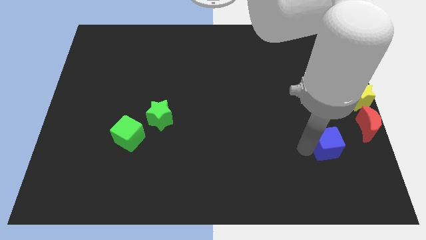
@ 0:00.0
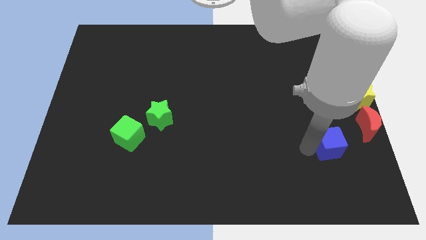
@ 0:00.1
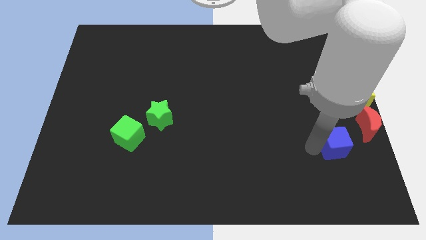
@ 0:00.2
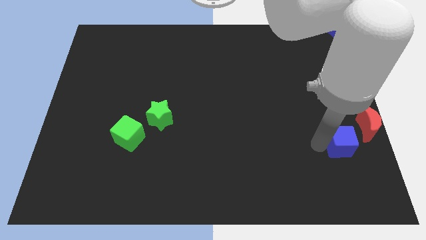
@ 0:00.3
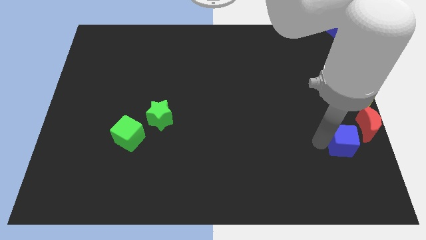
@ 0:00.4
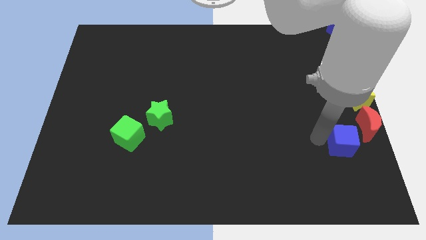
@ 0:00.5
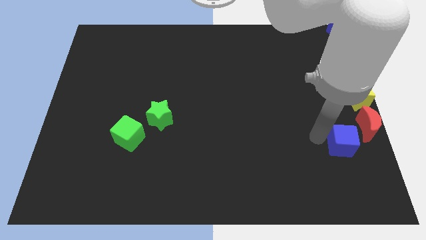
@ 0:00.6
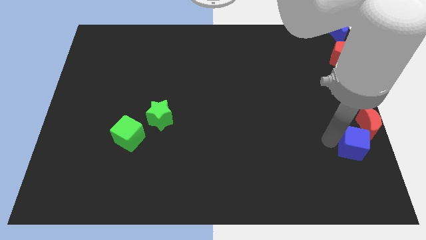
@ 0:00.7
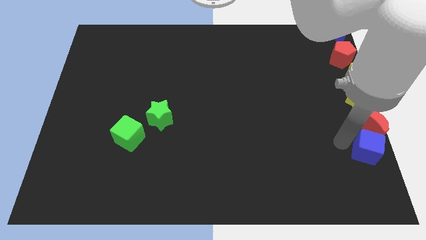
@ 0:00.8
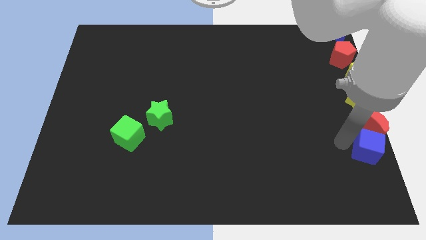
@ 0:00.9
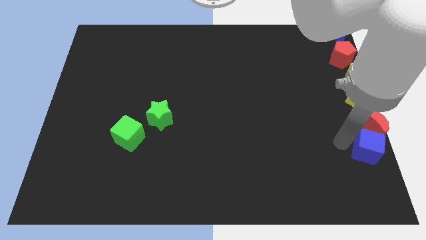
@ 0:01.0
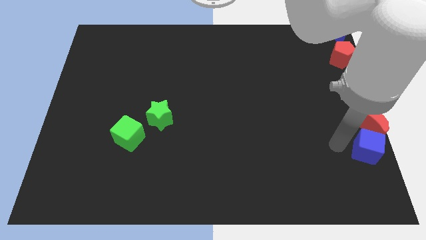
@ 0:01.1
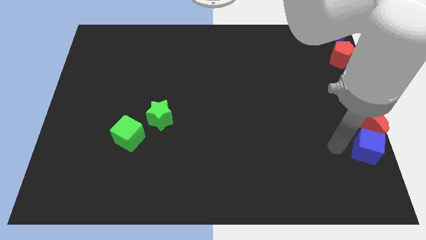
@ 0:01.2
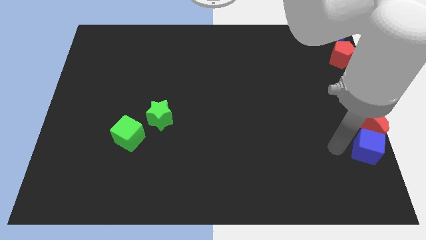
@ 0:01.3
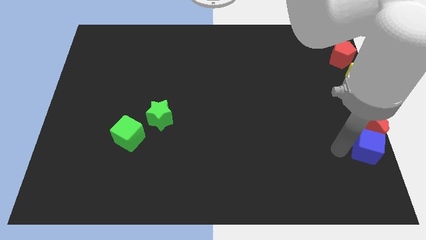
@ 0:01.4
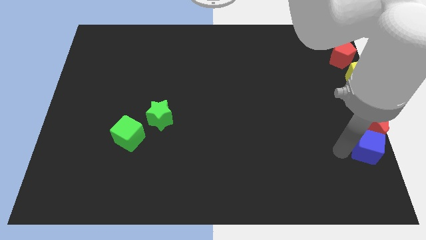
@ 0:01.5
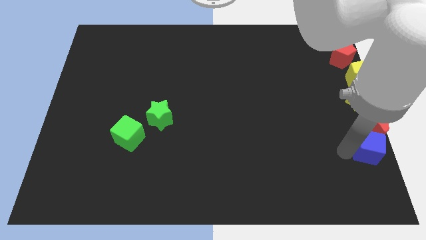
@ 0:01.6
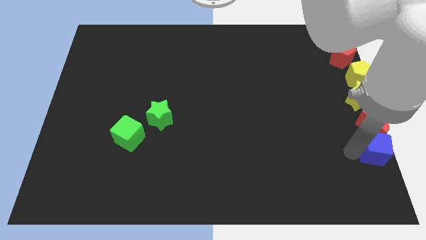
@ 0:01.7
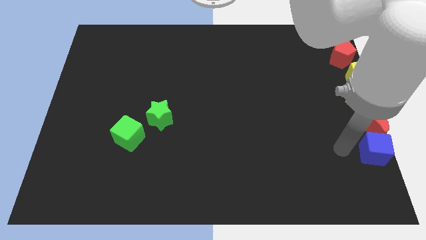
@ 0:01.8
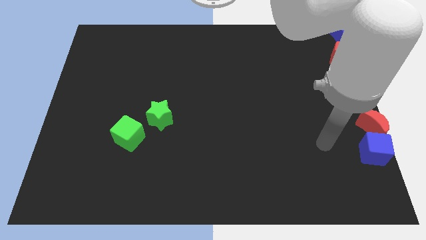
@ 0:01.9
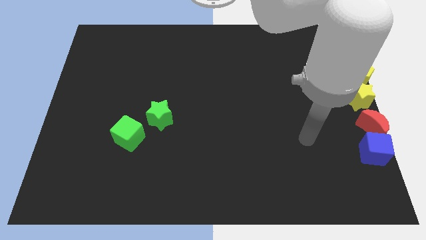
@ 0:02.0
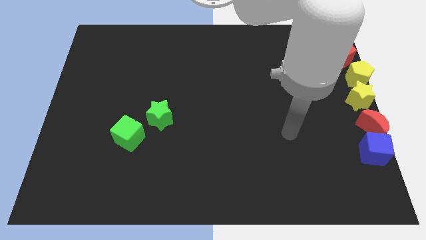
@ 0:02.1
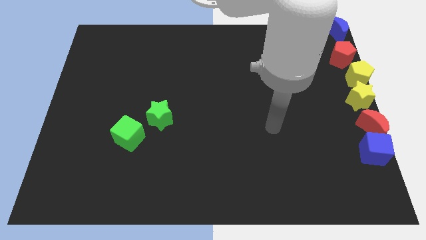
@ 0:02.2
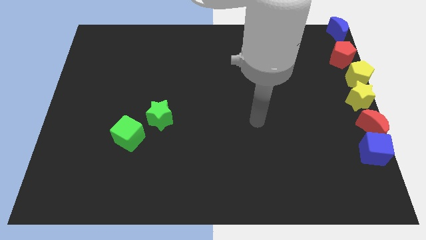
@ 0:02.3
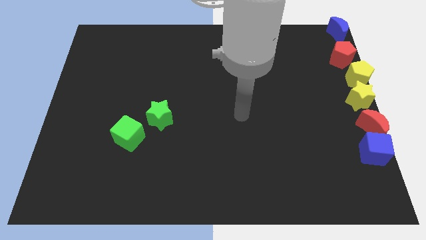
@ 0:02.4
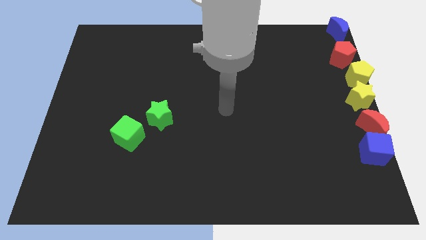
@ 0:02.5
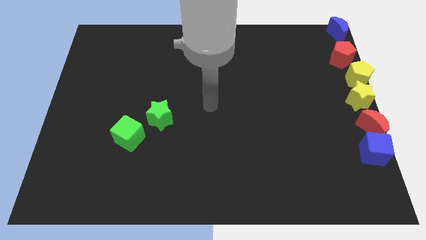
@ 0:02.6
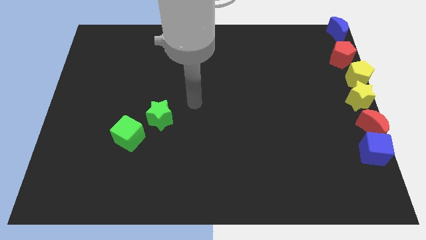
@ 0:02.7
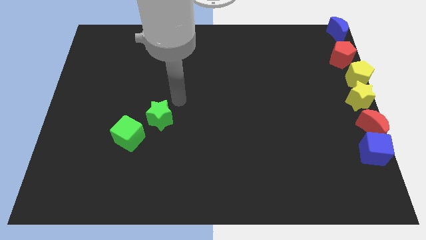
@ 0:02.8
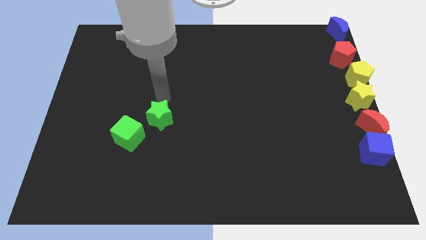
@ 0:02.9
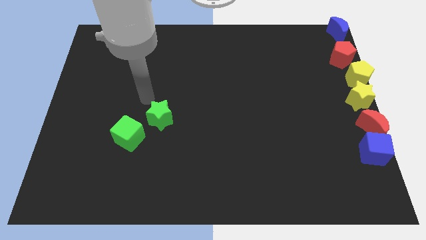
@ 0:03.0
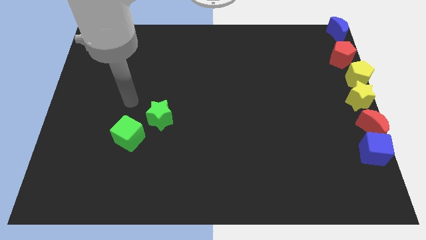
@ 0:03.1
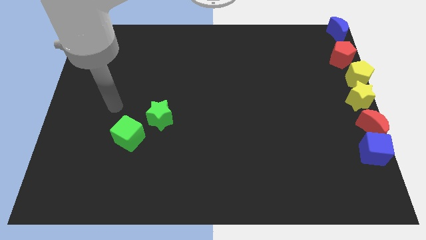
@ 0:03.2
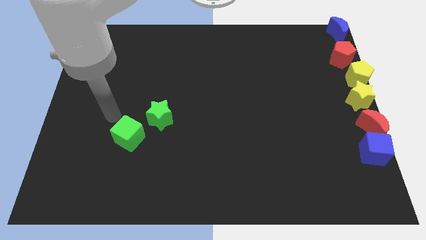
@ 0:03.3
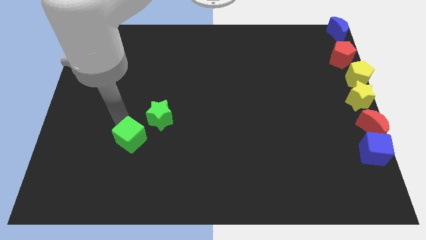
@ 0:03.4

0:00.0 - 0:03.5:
put the blue cube vertically below the red moon

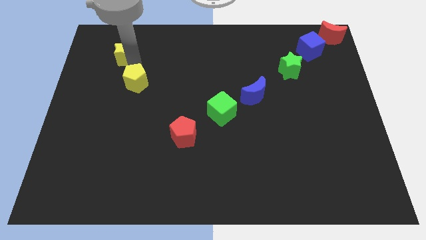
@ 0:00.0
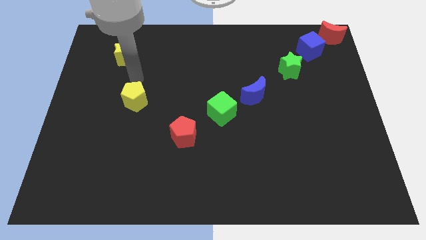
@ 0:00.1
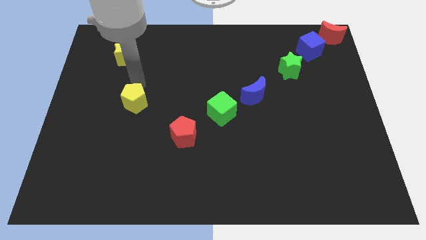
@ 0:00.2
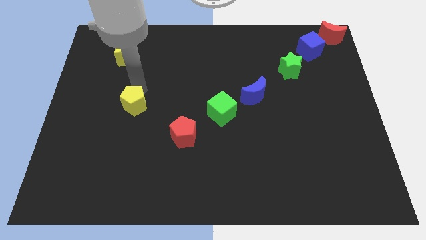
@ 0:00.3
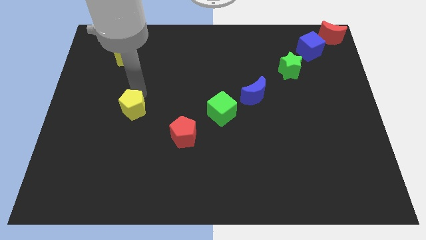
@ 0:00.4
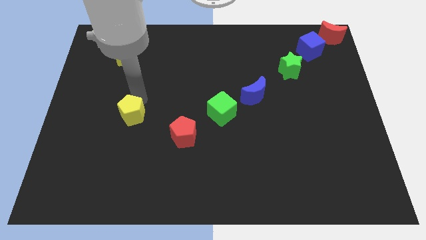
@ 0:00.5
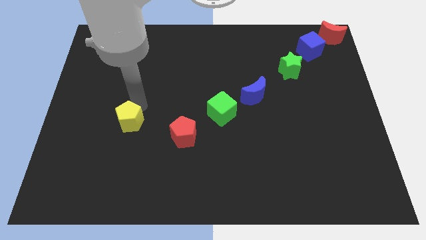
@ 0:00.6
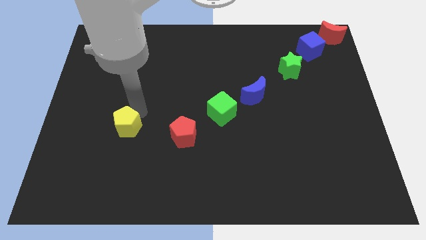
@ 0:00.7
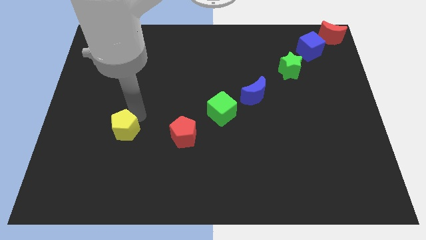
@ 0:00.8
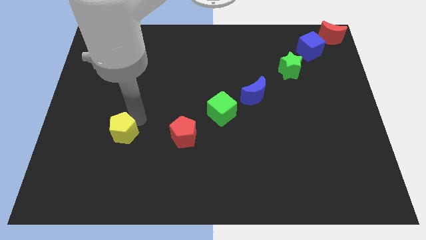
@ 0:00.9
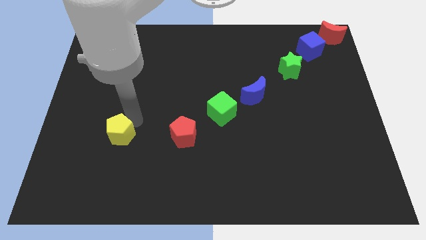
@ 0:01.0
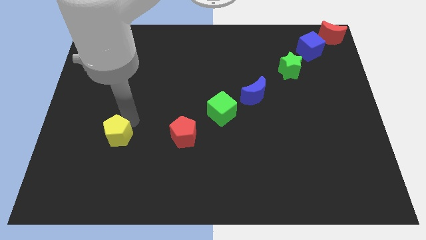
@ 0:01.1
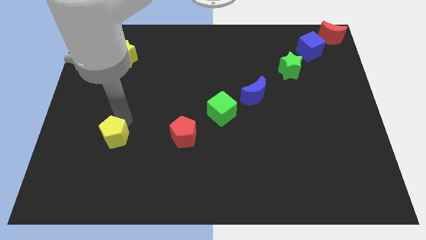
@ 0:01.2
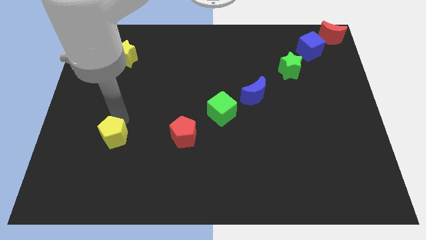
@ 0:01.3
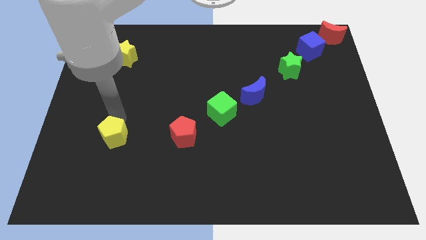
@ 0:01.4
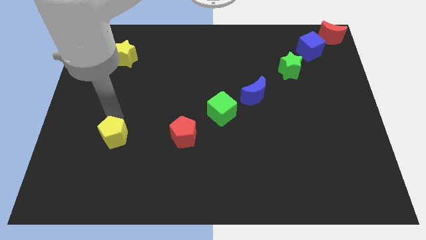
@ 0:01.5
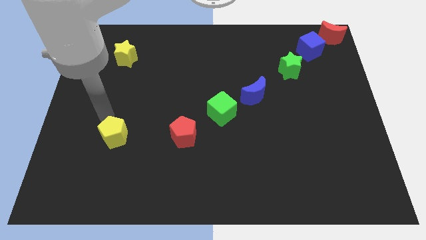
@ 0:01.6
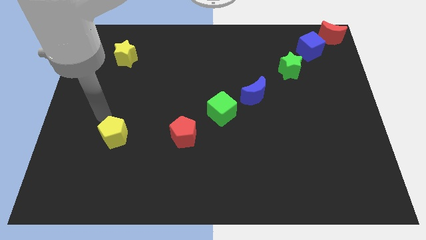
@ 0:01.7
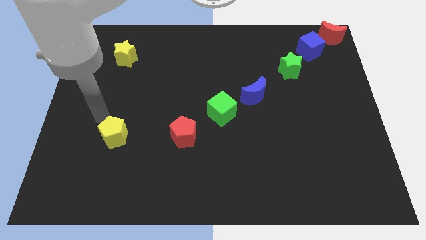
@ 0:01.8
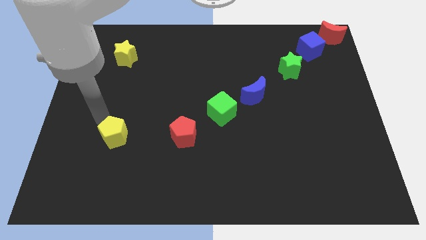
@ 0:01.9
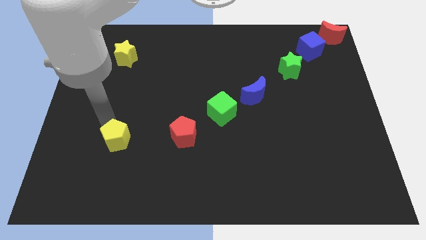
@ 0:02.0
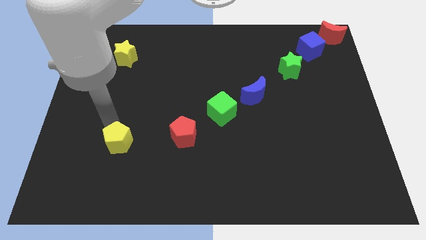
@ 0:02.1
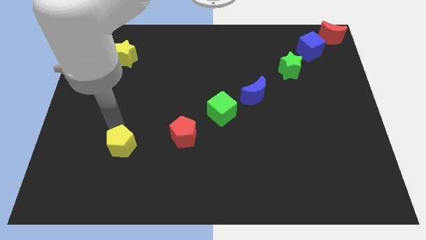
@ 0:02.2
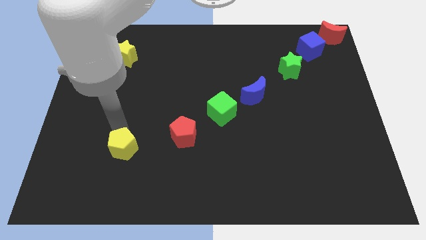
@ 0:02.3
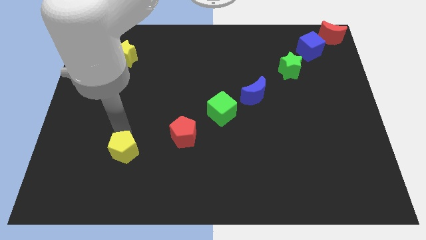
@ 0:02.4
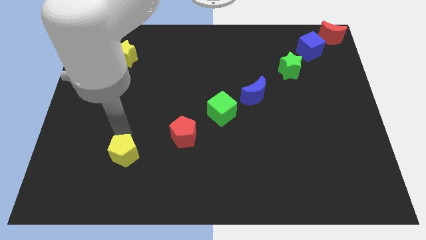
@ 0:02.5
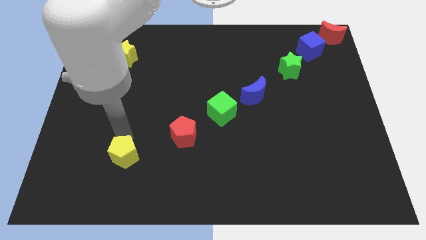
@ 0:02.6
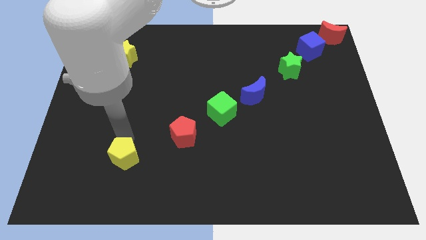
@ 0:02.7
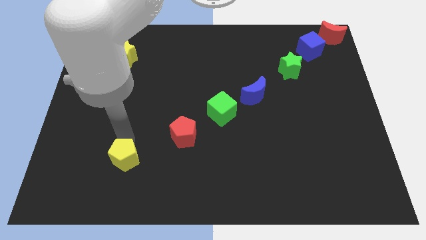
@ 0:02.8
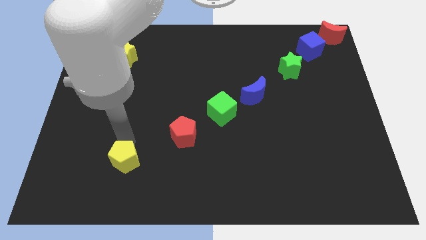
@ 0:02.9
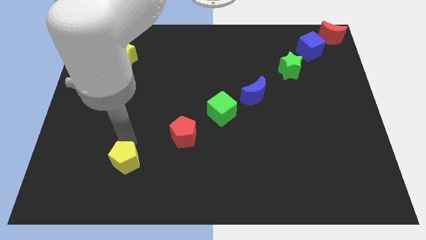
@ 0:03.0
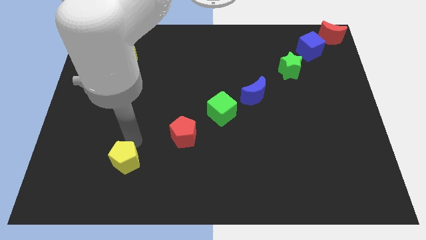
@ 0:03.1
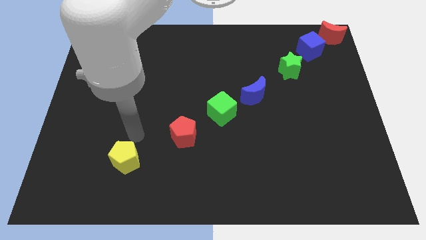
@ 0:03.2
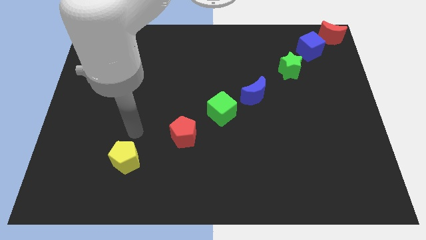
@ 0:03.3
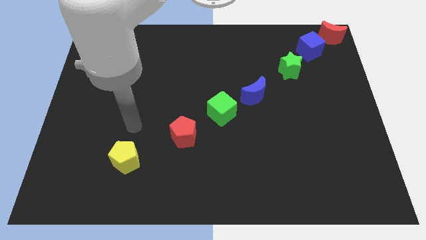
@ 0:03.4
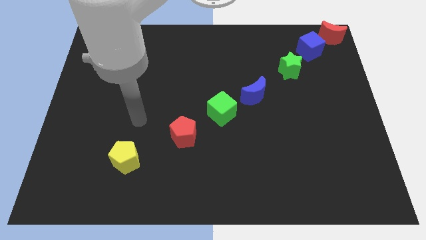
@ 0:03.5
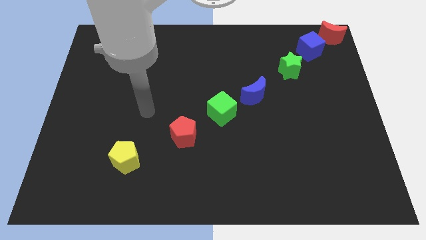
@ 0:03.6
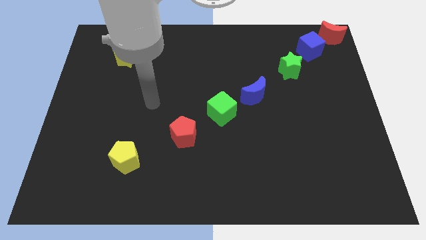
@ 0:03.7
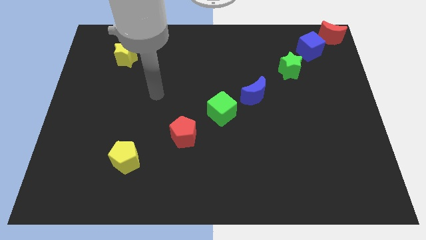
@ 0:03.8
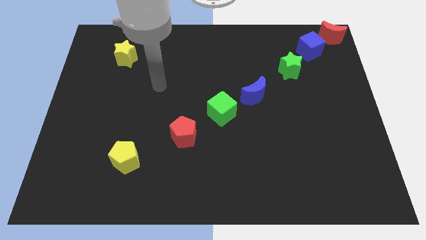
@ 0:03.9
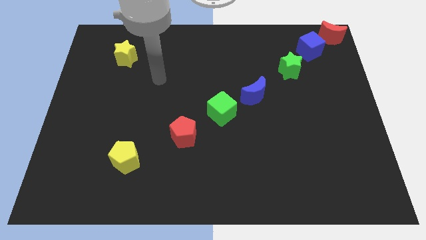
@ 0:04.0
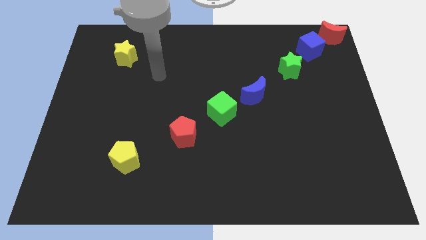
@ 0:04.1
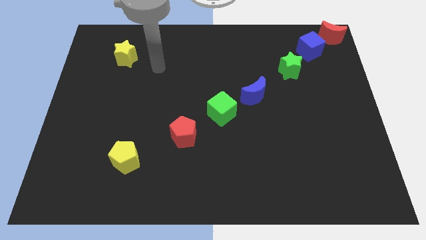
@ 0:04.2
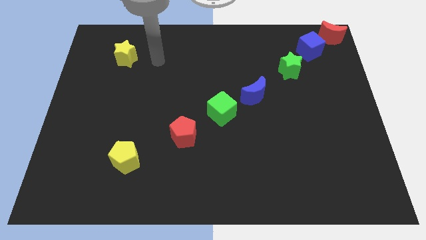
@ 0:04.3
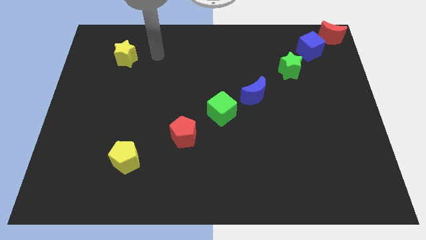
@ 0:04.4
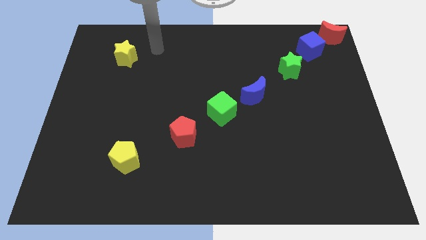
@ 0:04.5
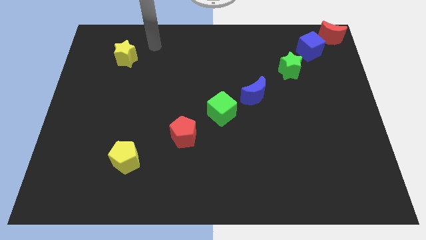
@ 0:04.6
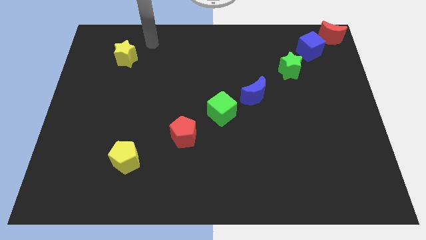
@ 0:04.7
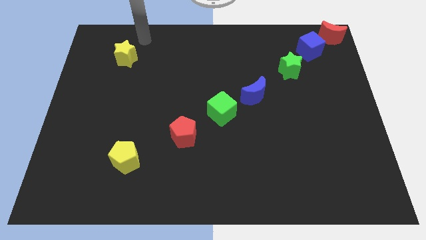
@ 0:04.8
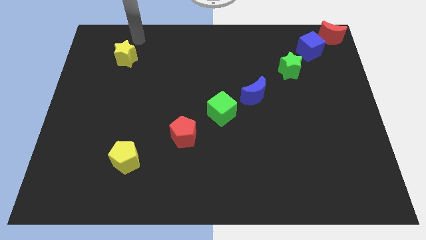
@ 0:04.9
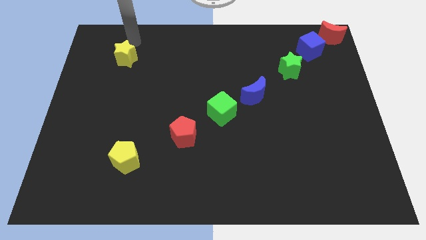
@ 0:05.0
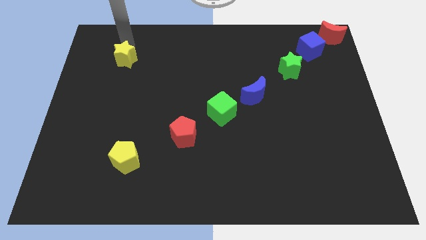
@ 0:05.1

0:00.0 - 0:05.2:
move the yellow pentagon diagonal to the left bottom of the red pentagon

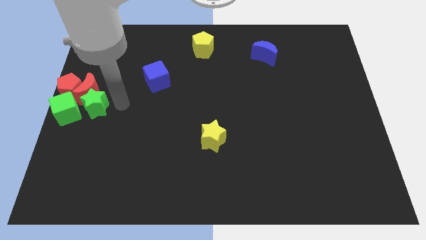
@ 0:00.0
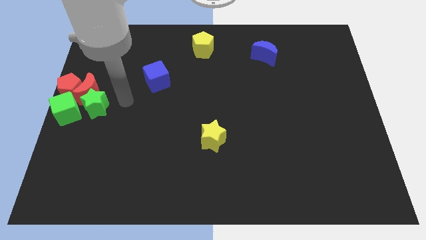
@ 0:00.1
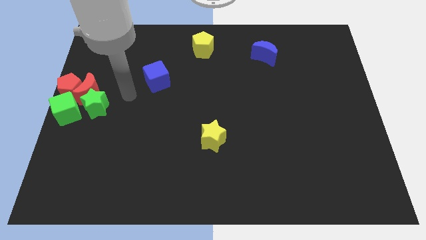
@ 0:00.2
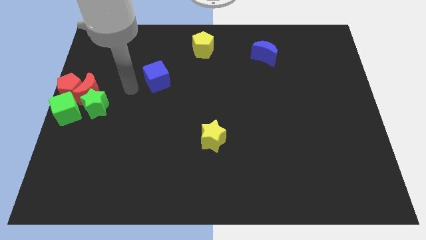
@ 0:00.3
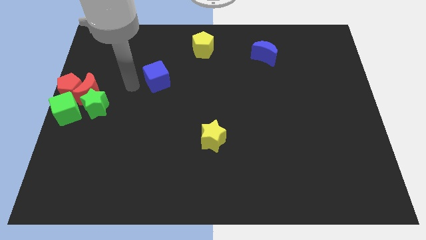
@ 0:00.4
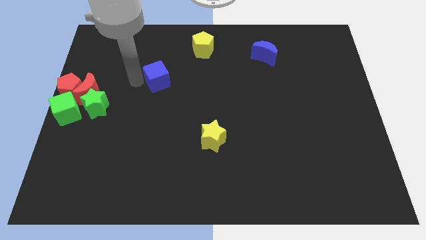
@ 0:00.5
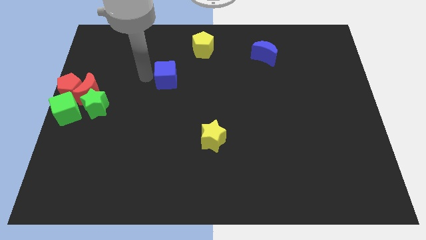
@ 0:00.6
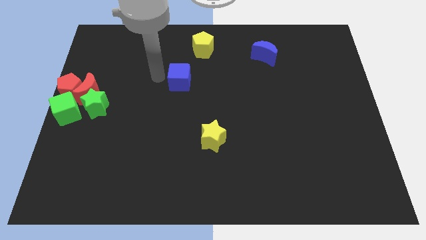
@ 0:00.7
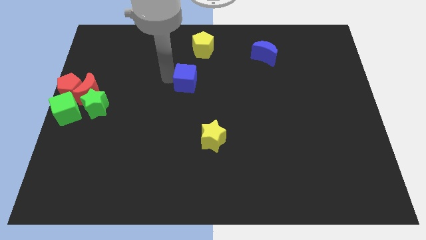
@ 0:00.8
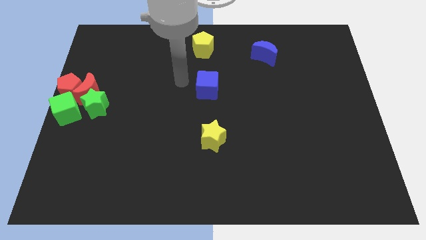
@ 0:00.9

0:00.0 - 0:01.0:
place the blue cube below the yellow pentagon
